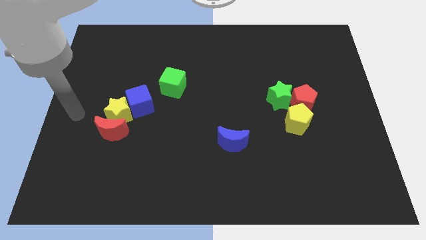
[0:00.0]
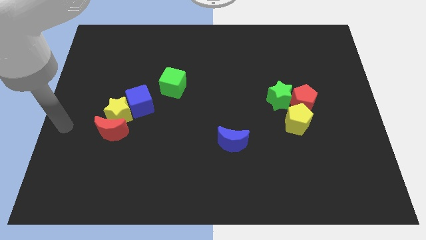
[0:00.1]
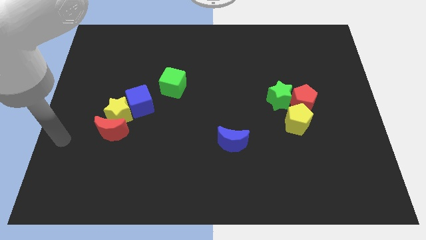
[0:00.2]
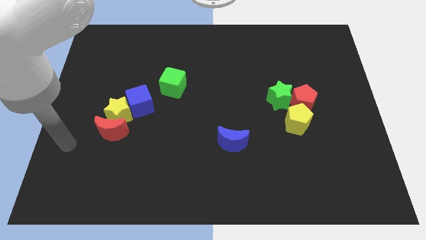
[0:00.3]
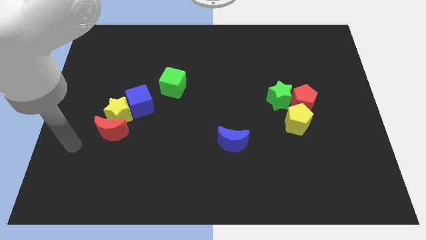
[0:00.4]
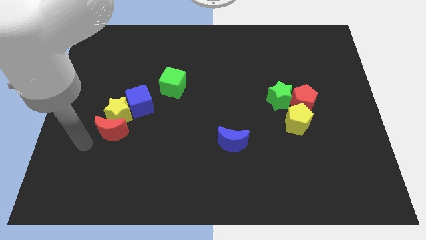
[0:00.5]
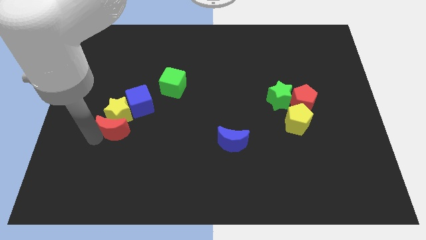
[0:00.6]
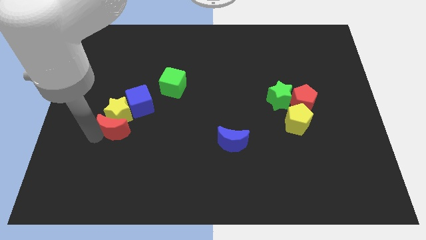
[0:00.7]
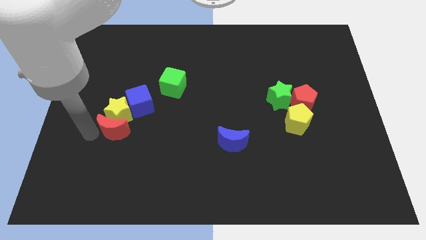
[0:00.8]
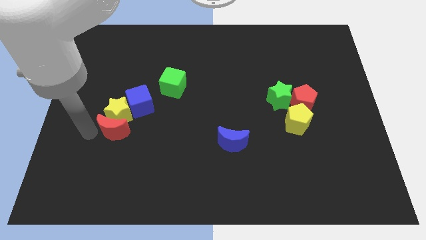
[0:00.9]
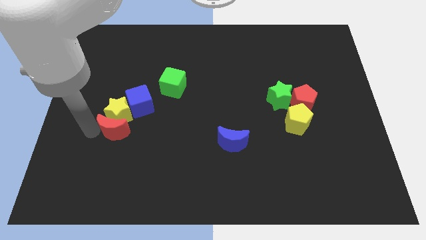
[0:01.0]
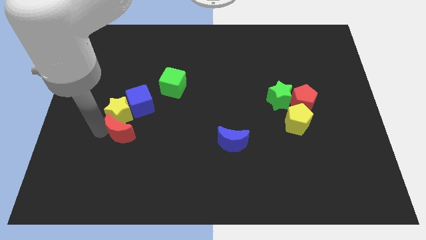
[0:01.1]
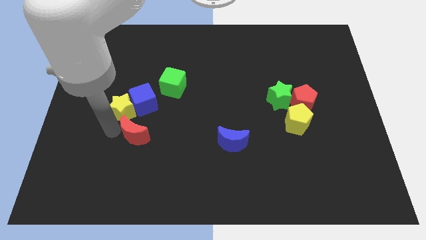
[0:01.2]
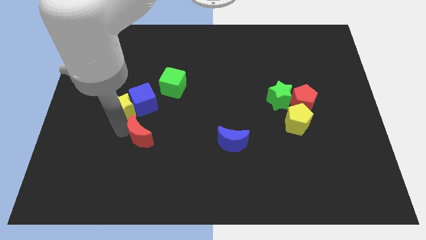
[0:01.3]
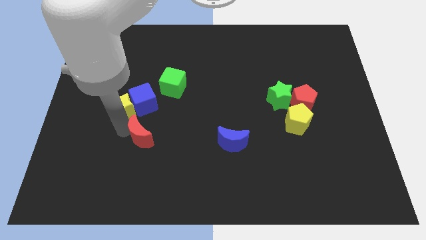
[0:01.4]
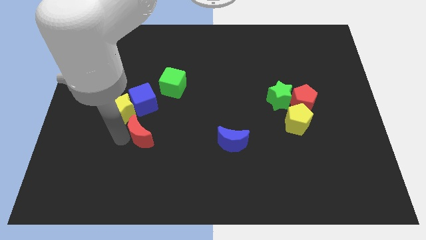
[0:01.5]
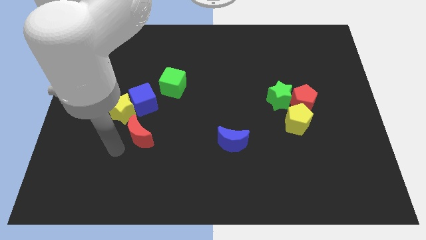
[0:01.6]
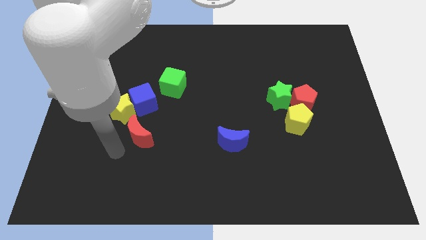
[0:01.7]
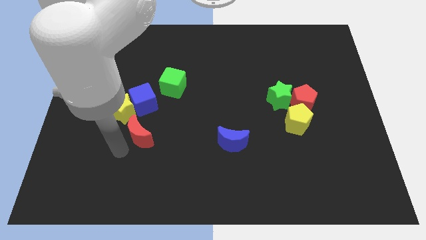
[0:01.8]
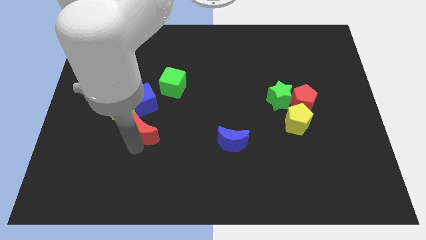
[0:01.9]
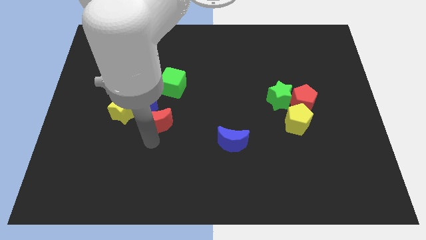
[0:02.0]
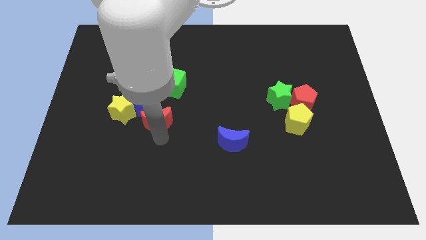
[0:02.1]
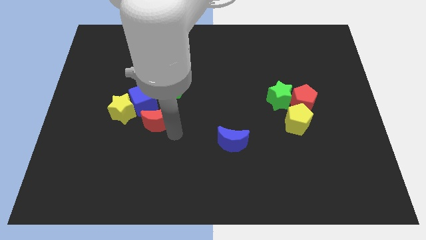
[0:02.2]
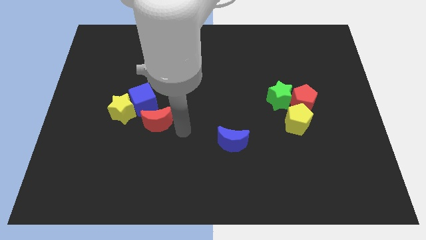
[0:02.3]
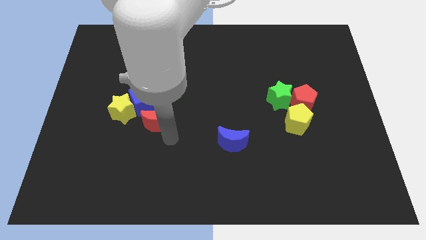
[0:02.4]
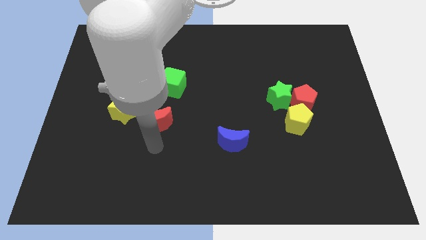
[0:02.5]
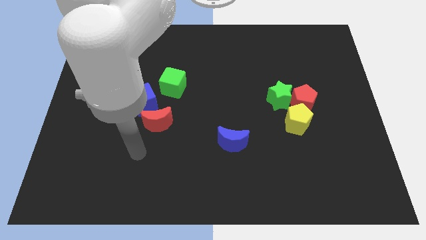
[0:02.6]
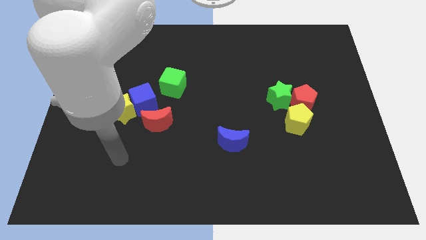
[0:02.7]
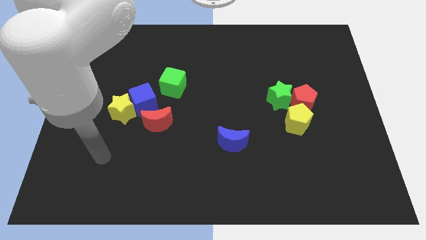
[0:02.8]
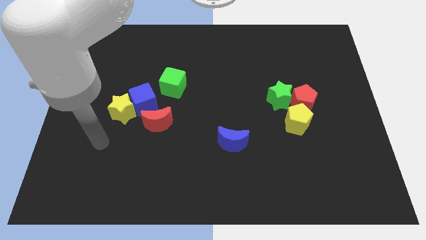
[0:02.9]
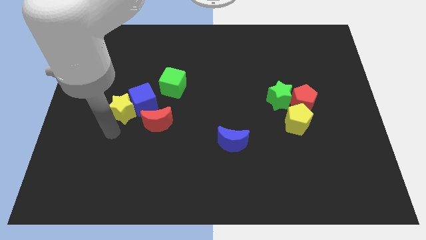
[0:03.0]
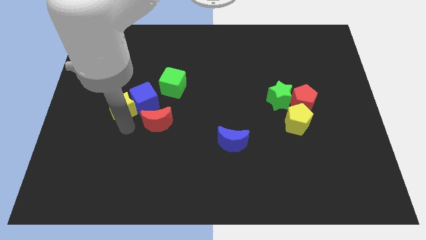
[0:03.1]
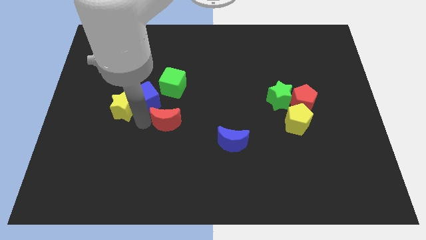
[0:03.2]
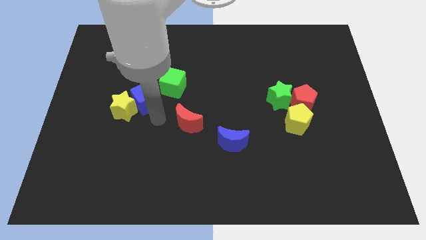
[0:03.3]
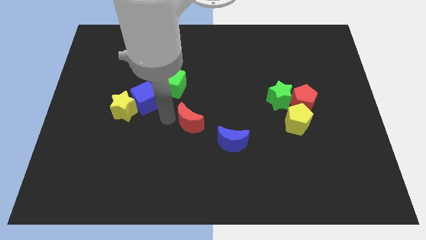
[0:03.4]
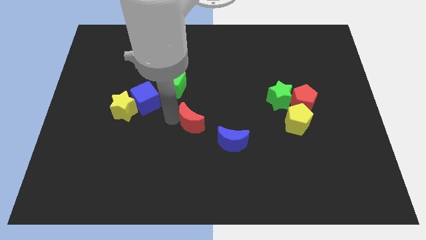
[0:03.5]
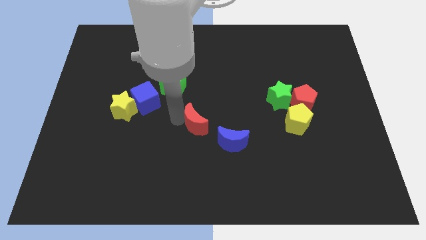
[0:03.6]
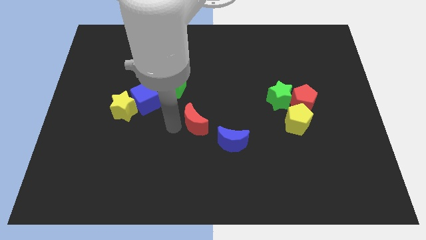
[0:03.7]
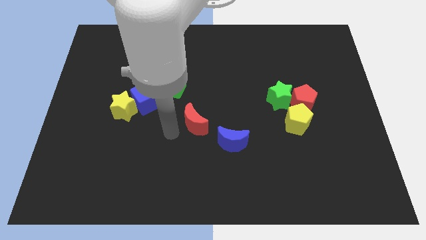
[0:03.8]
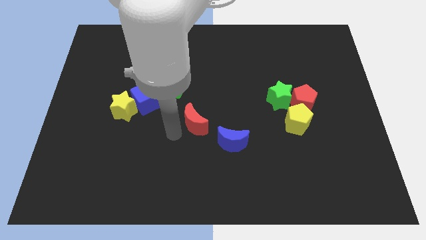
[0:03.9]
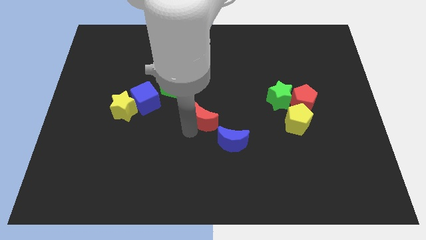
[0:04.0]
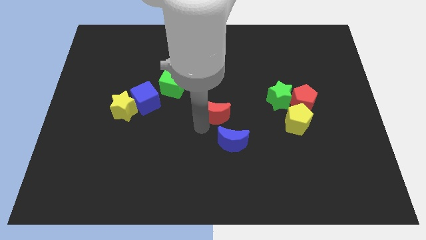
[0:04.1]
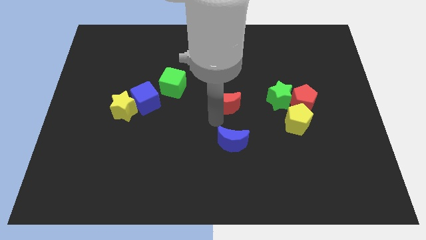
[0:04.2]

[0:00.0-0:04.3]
place the red crescent above the blue crescent

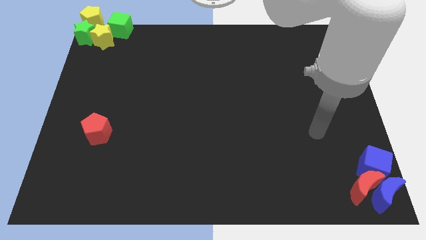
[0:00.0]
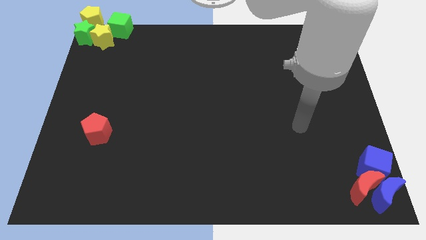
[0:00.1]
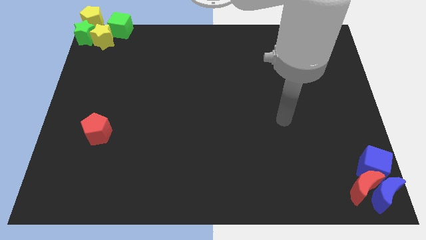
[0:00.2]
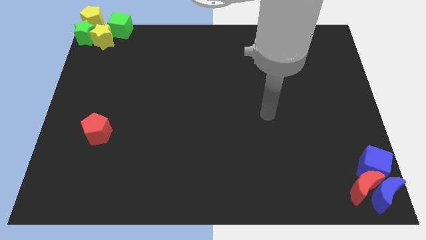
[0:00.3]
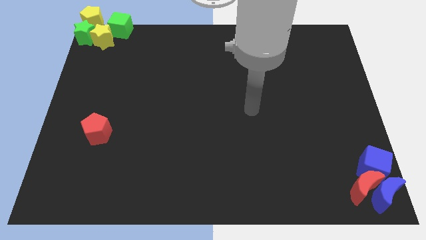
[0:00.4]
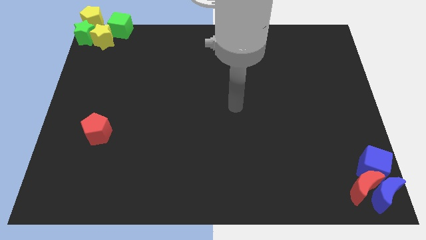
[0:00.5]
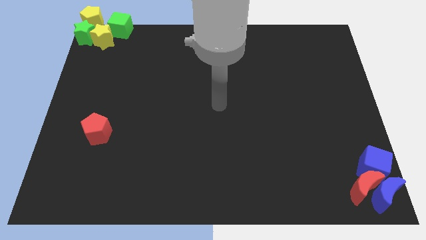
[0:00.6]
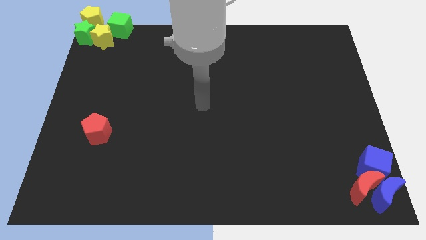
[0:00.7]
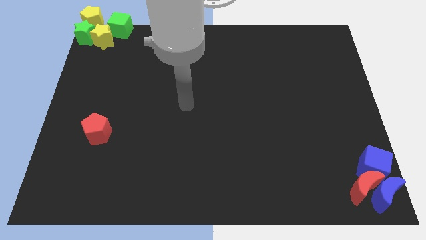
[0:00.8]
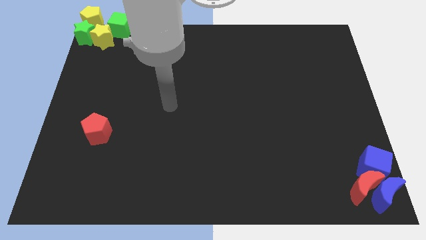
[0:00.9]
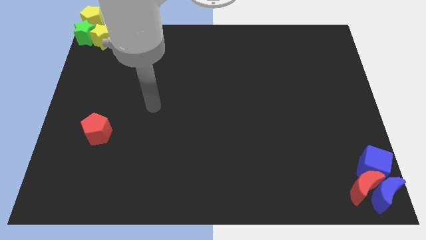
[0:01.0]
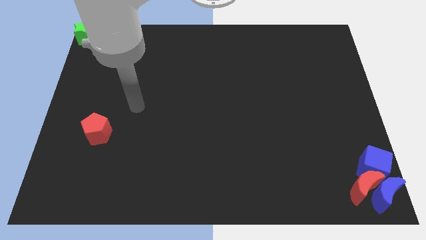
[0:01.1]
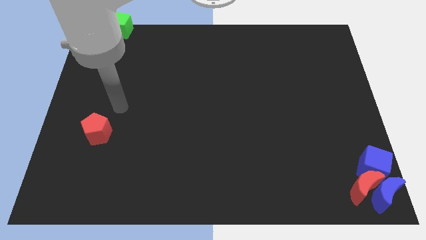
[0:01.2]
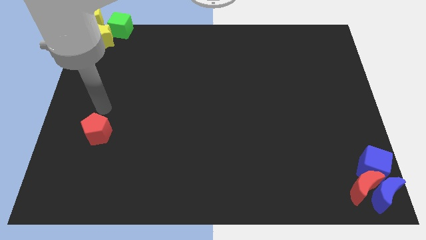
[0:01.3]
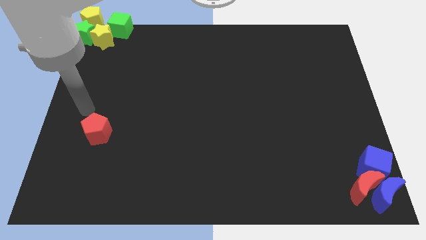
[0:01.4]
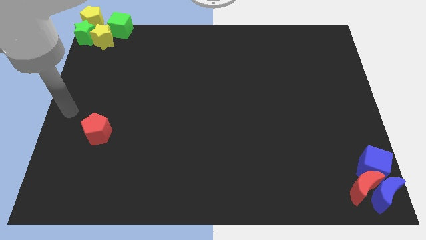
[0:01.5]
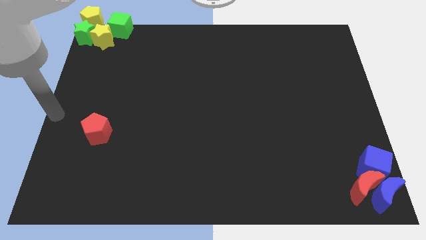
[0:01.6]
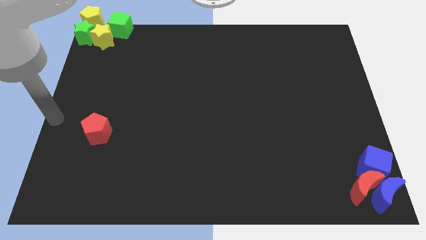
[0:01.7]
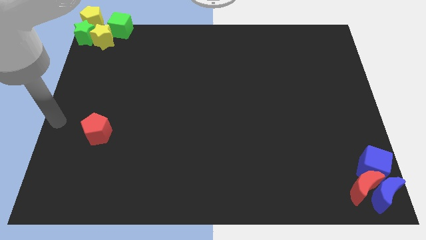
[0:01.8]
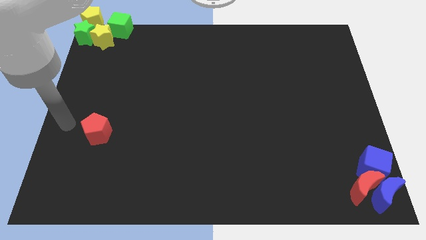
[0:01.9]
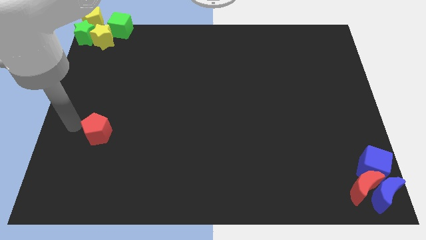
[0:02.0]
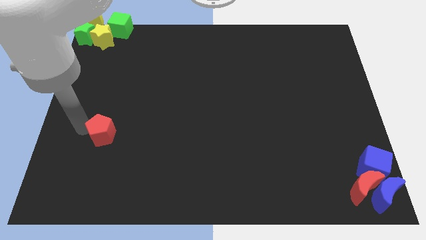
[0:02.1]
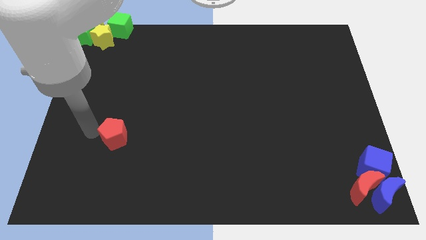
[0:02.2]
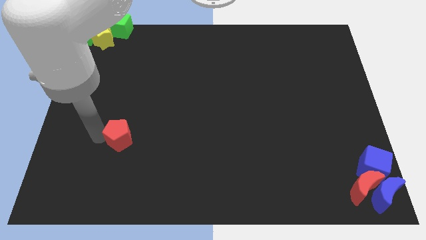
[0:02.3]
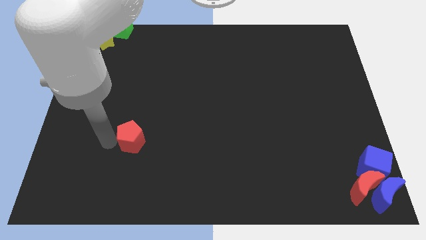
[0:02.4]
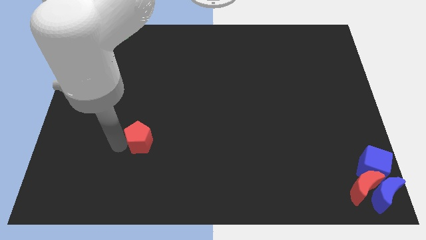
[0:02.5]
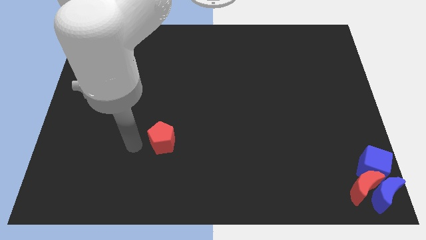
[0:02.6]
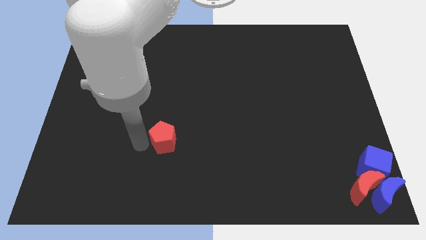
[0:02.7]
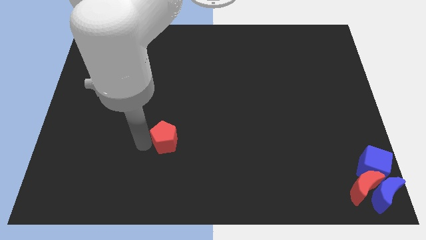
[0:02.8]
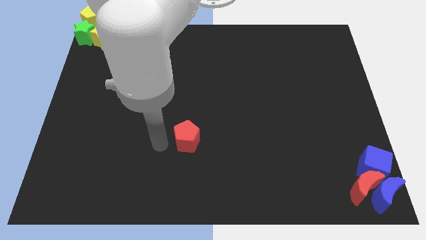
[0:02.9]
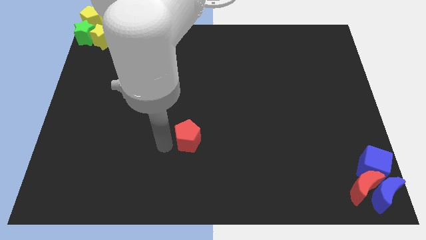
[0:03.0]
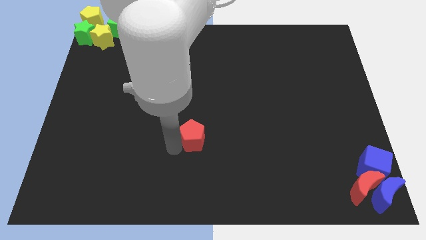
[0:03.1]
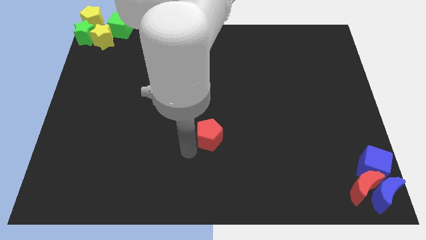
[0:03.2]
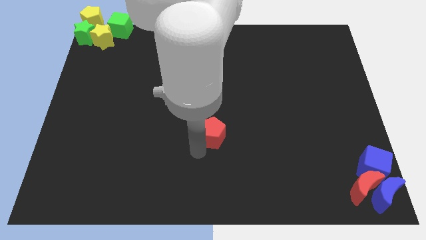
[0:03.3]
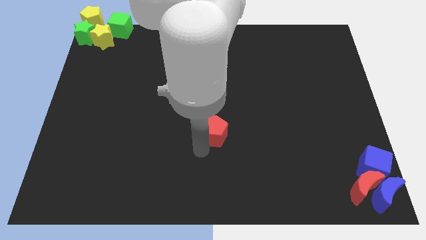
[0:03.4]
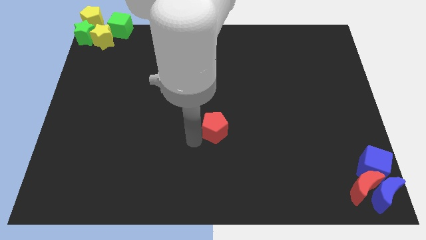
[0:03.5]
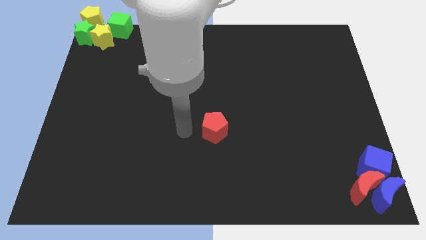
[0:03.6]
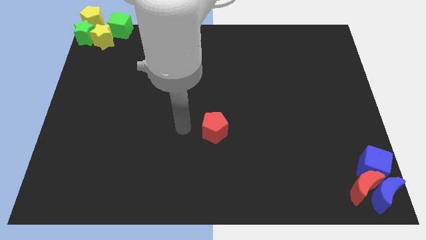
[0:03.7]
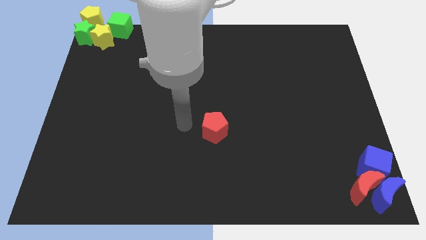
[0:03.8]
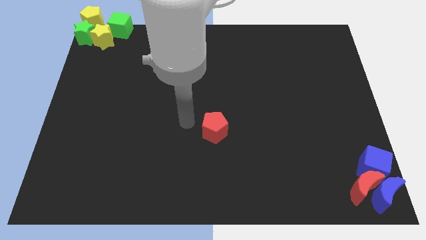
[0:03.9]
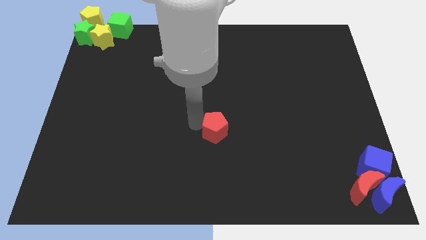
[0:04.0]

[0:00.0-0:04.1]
move the red pentagon to the center of the board

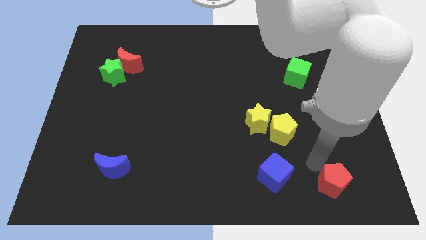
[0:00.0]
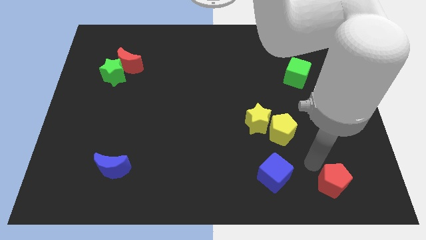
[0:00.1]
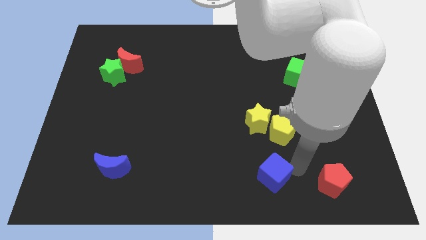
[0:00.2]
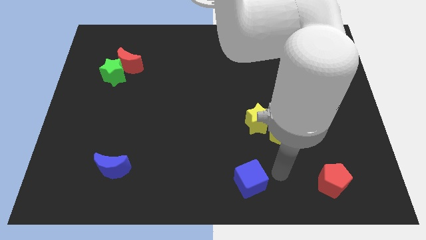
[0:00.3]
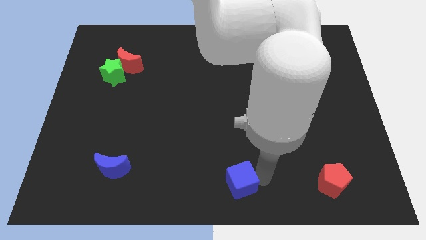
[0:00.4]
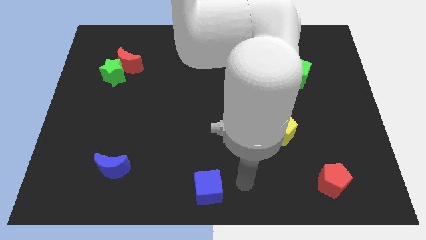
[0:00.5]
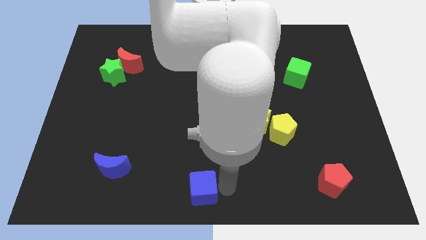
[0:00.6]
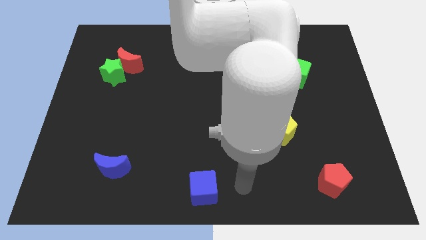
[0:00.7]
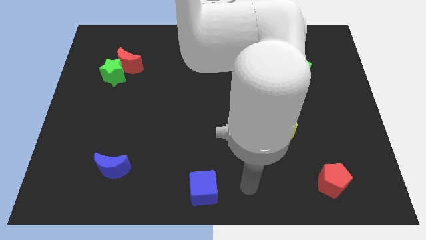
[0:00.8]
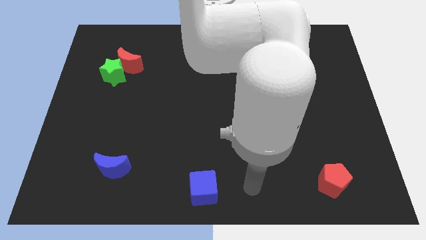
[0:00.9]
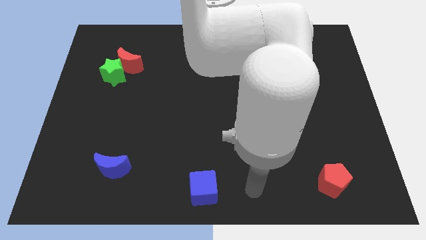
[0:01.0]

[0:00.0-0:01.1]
put the blue cube at the bottom center of the board
